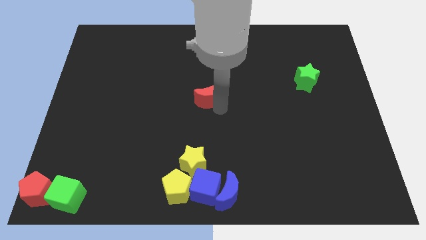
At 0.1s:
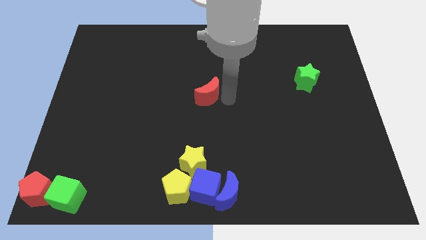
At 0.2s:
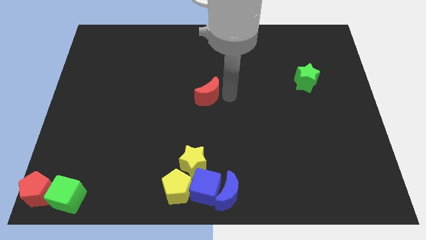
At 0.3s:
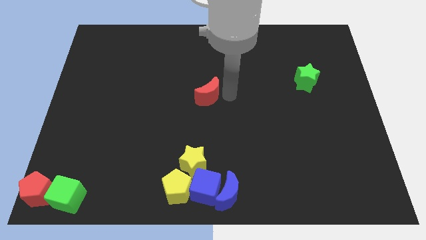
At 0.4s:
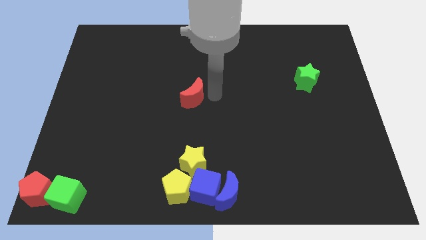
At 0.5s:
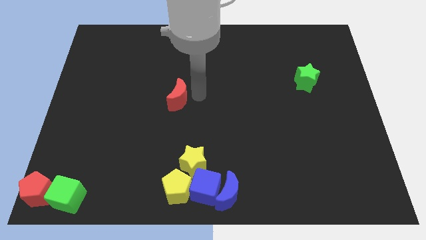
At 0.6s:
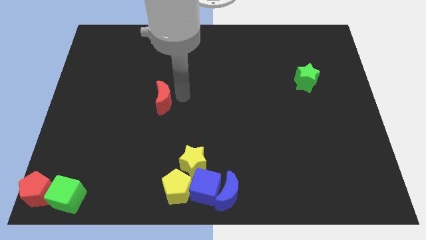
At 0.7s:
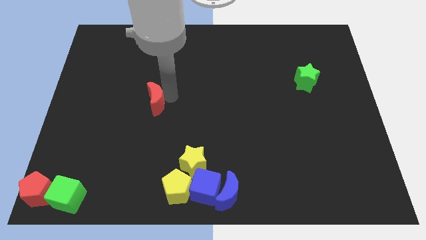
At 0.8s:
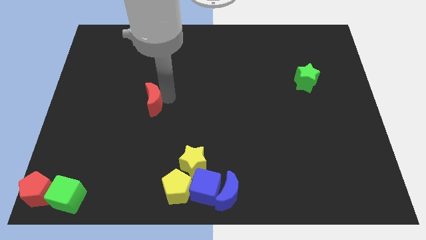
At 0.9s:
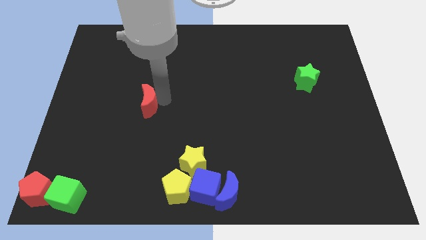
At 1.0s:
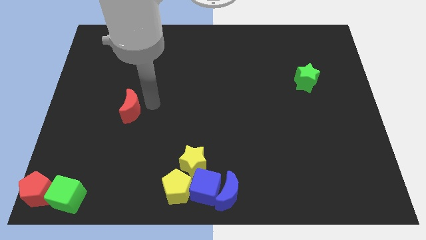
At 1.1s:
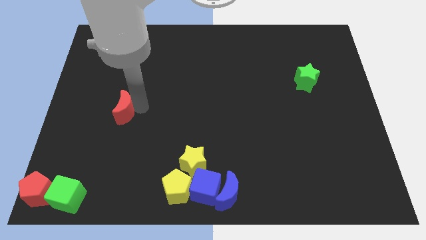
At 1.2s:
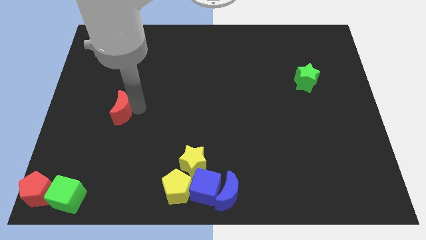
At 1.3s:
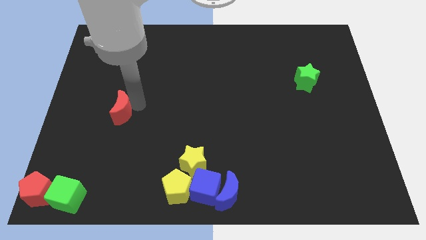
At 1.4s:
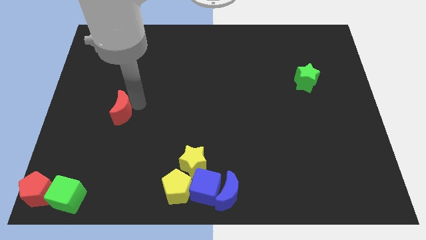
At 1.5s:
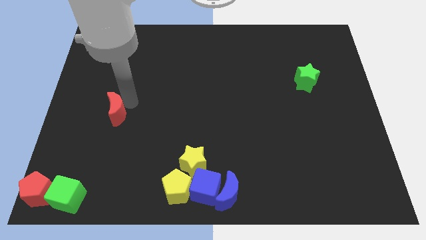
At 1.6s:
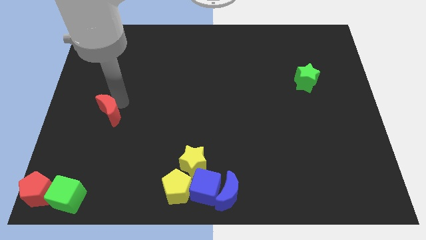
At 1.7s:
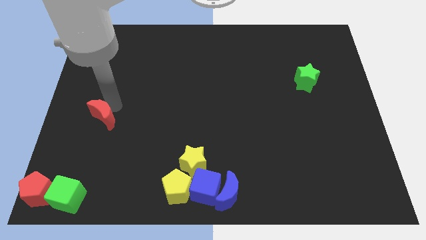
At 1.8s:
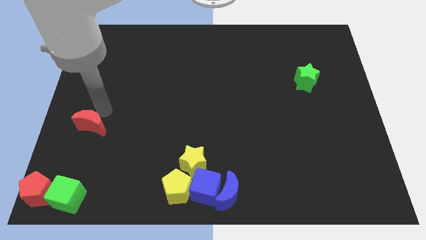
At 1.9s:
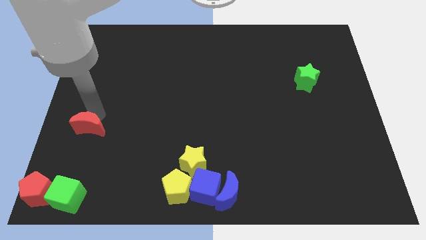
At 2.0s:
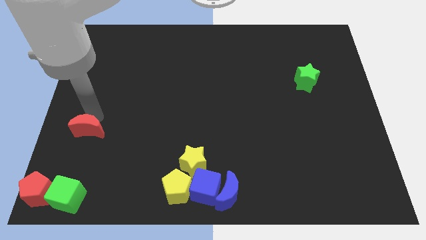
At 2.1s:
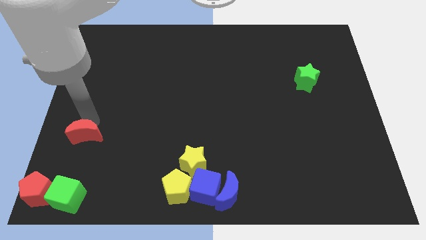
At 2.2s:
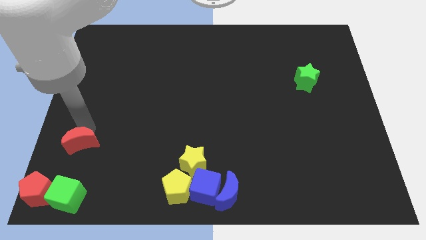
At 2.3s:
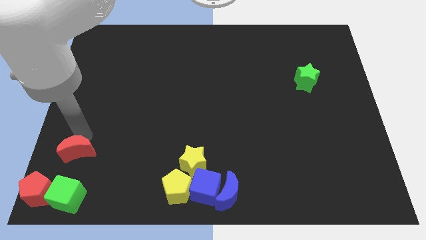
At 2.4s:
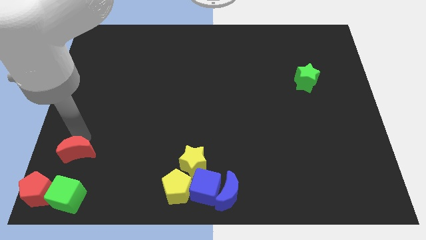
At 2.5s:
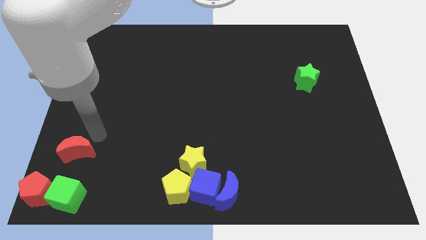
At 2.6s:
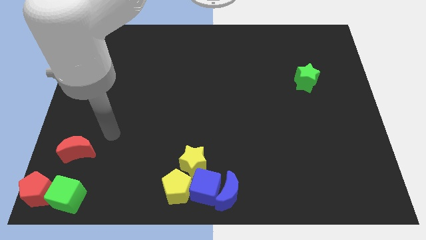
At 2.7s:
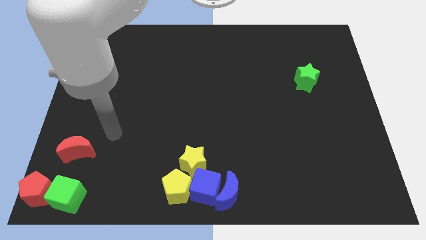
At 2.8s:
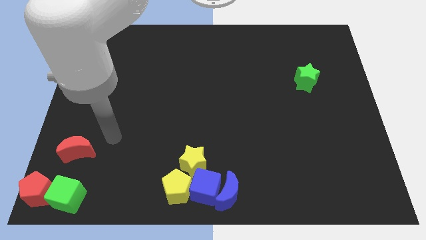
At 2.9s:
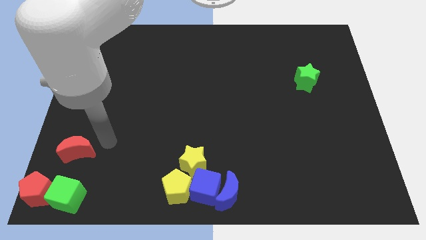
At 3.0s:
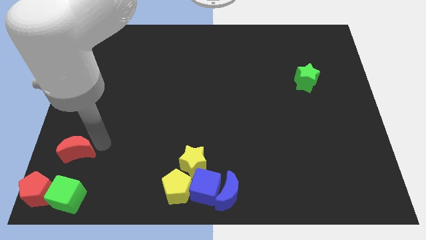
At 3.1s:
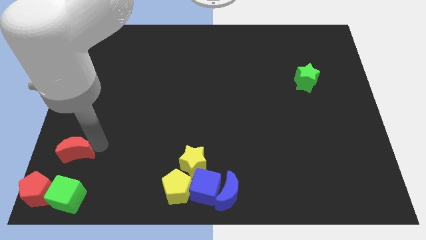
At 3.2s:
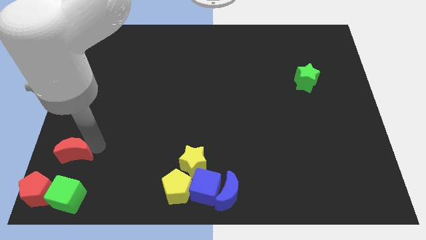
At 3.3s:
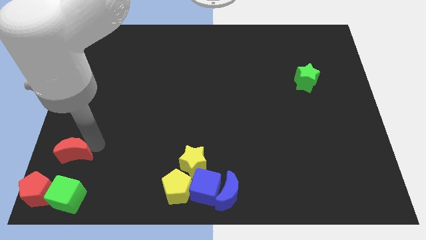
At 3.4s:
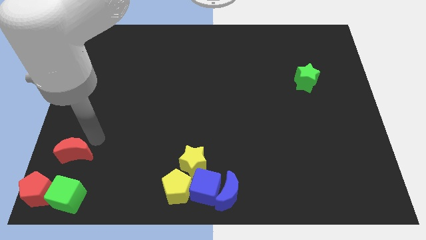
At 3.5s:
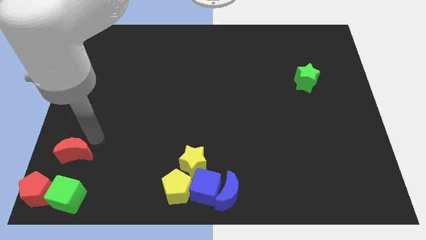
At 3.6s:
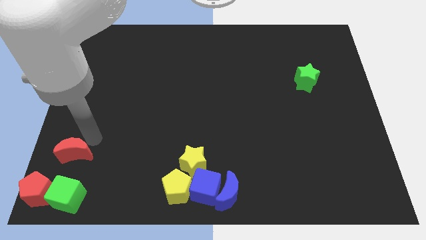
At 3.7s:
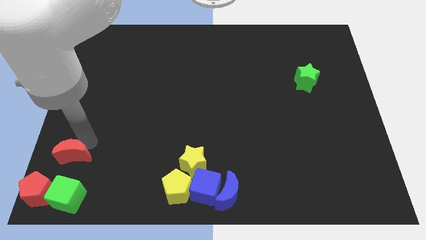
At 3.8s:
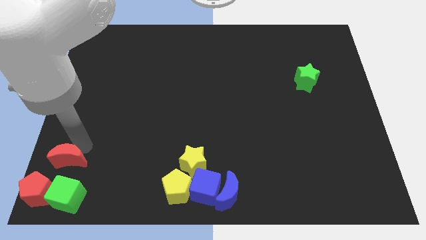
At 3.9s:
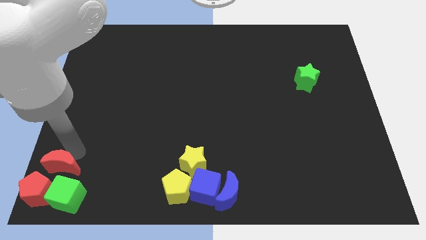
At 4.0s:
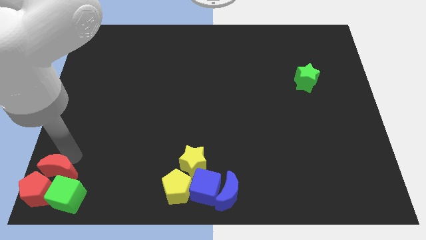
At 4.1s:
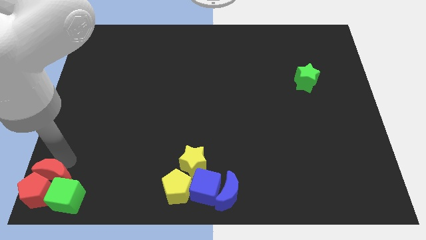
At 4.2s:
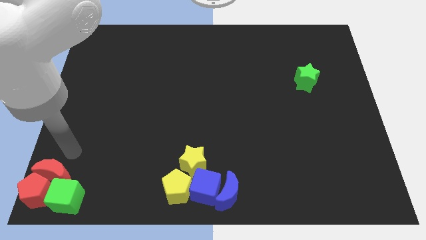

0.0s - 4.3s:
push the red crescent into the group of blocks at the bottom left of the table

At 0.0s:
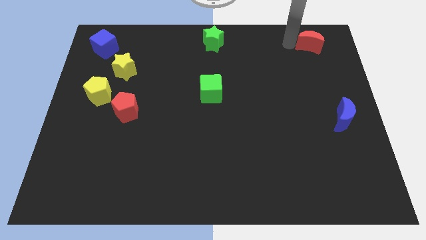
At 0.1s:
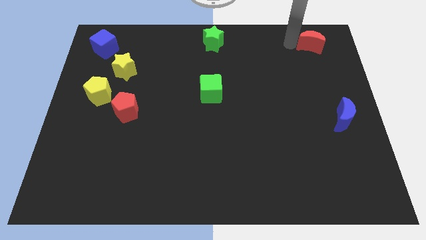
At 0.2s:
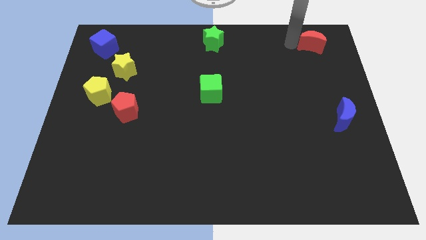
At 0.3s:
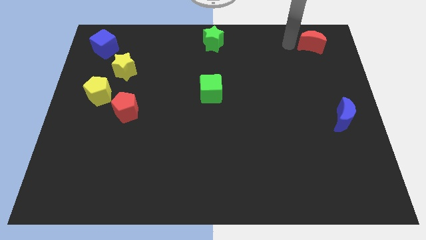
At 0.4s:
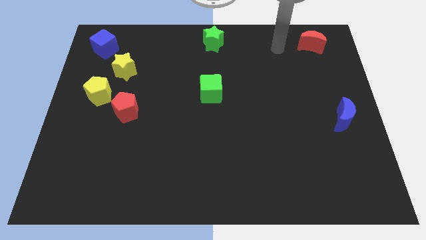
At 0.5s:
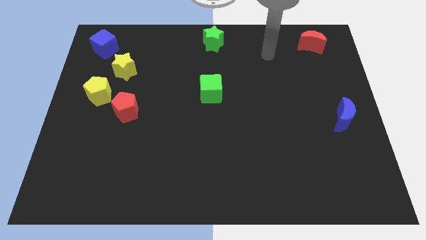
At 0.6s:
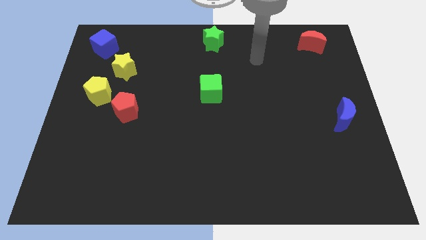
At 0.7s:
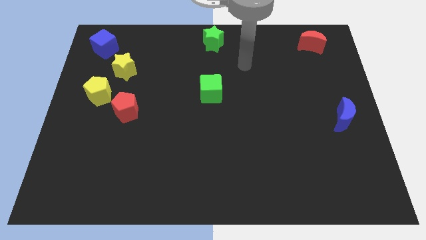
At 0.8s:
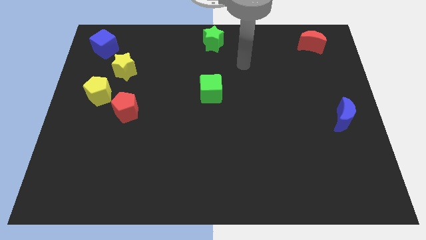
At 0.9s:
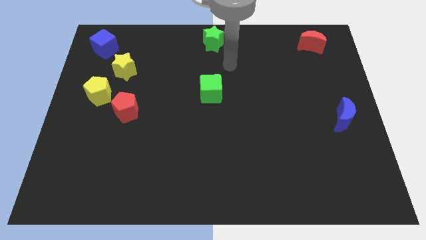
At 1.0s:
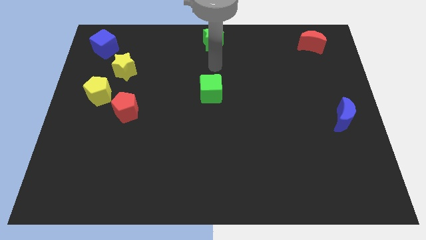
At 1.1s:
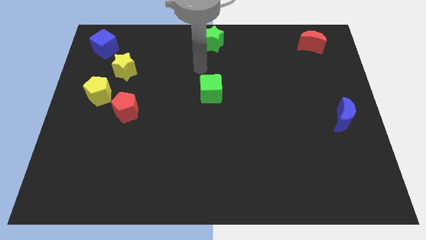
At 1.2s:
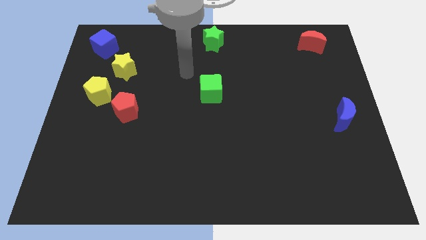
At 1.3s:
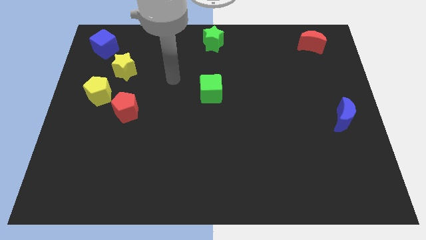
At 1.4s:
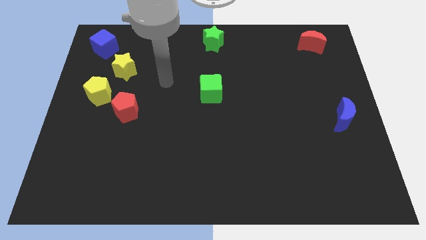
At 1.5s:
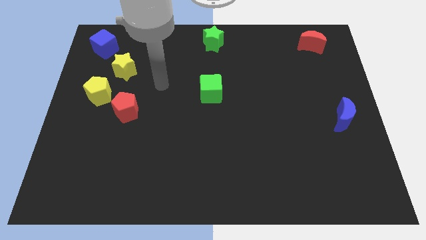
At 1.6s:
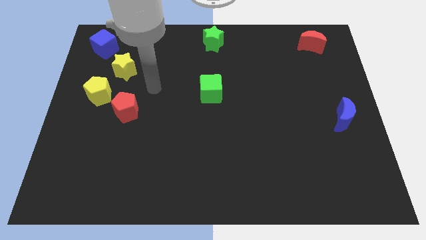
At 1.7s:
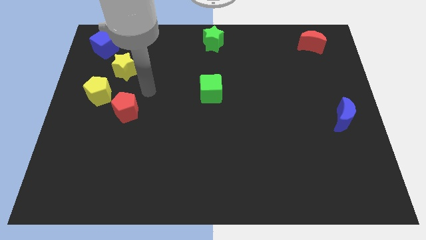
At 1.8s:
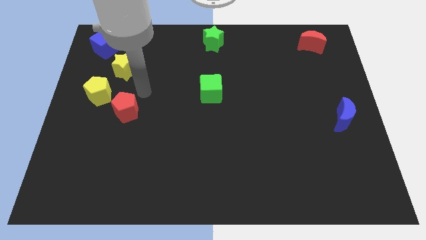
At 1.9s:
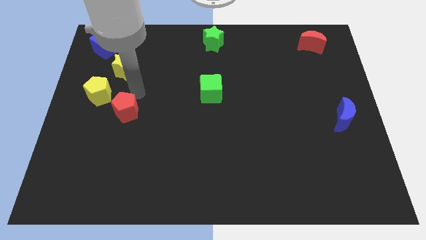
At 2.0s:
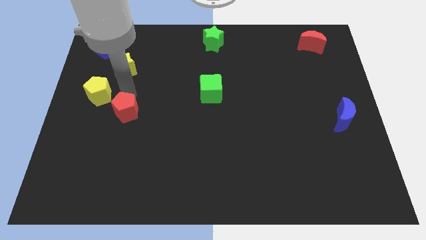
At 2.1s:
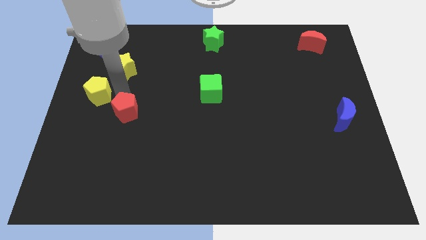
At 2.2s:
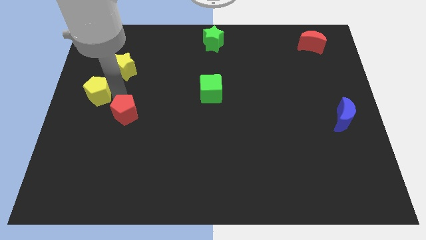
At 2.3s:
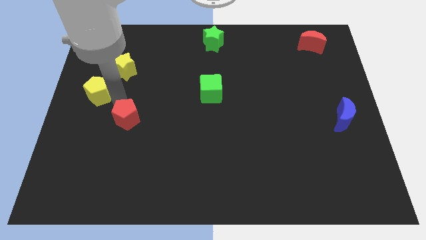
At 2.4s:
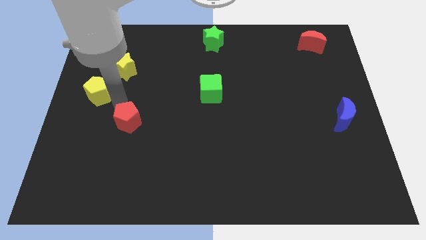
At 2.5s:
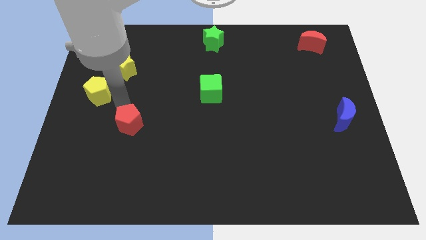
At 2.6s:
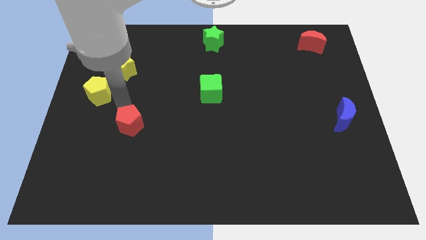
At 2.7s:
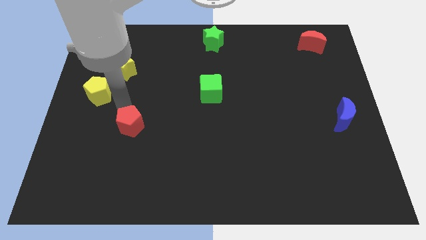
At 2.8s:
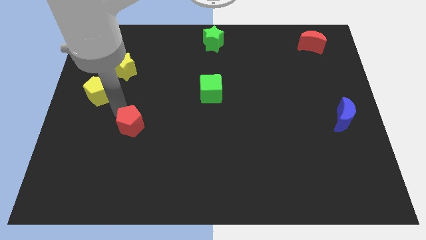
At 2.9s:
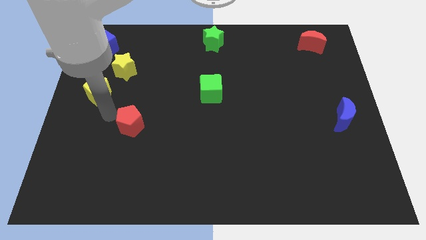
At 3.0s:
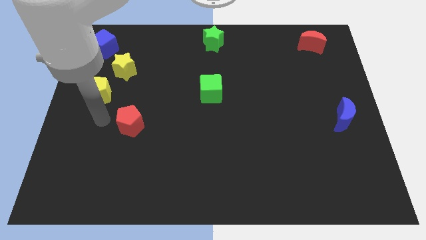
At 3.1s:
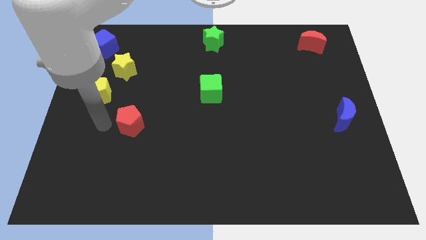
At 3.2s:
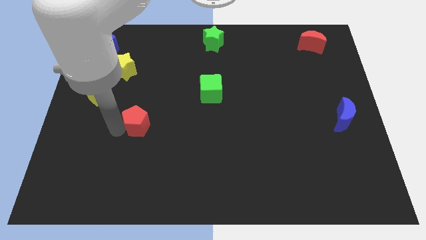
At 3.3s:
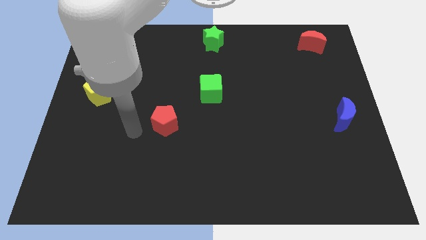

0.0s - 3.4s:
go near red pentagon

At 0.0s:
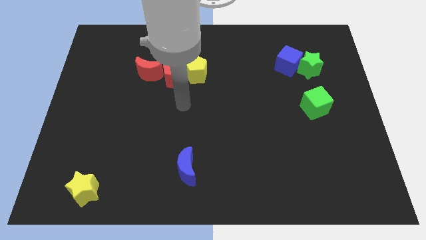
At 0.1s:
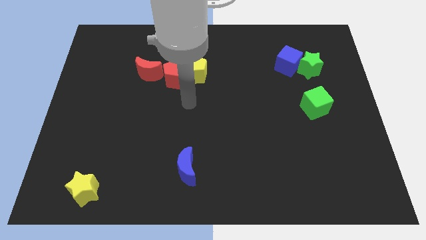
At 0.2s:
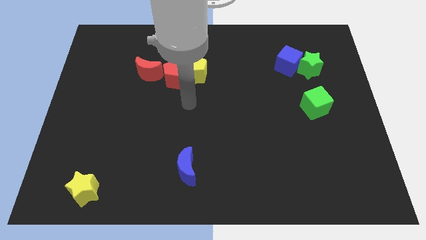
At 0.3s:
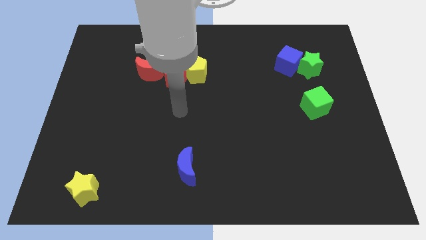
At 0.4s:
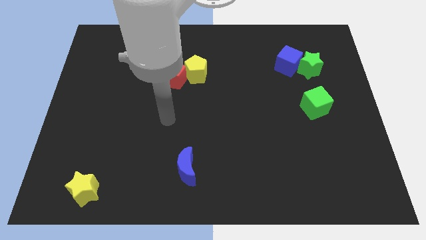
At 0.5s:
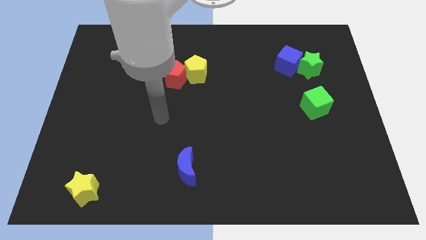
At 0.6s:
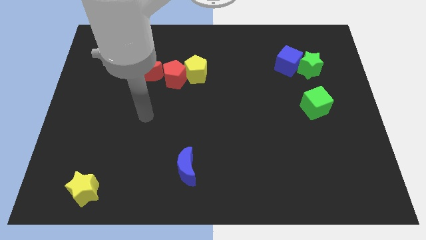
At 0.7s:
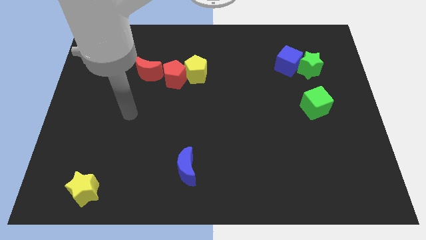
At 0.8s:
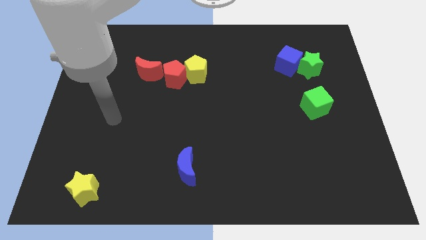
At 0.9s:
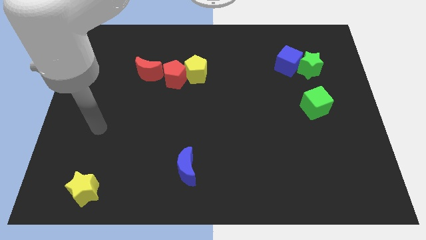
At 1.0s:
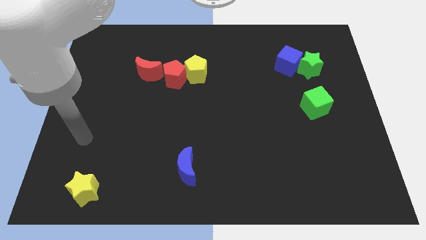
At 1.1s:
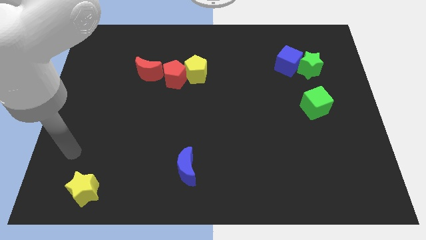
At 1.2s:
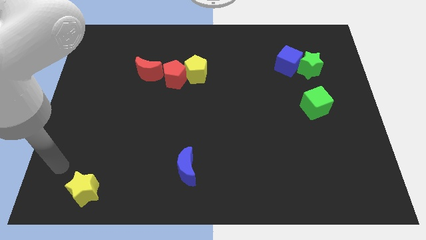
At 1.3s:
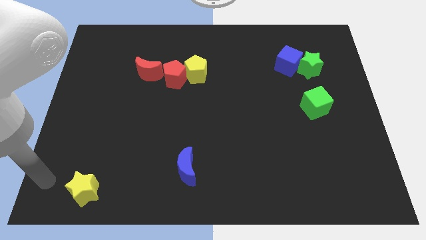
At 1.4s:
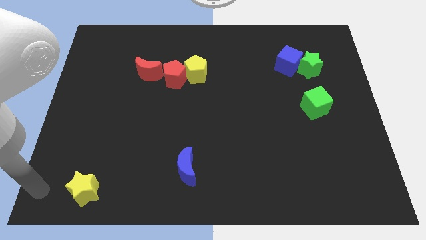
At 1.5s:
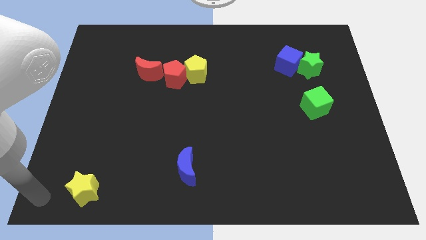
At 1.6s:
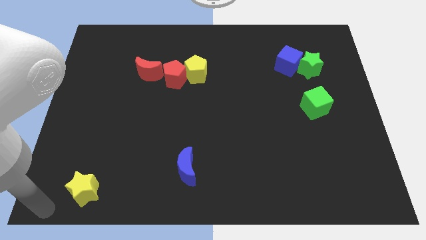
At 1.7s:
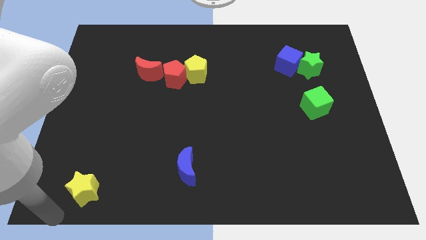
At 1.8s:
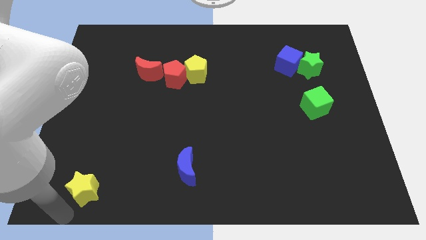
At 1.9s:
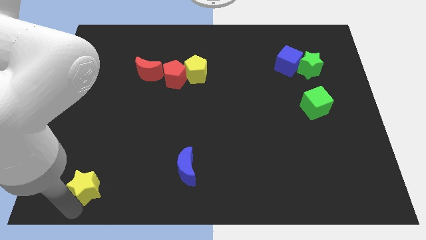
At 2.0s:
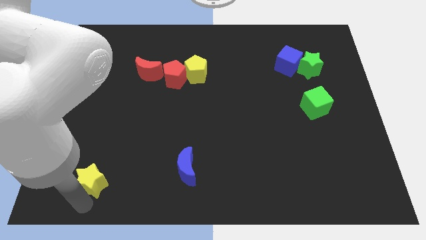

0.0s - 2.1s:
move the yellow star slightly up
